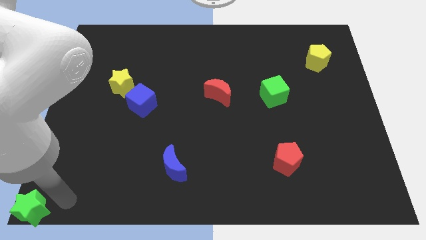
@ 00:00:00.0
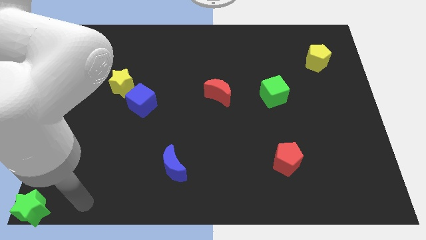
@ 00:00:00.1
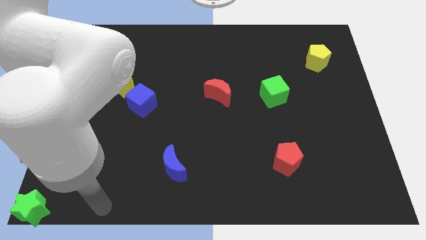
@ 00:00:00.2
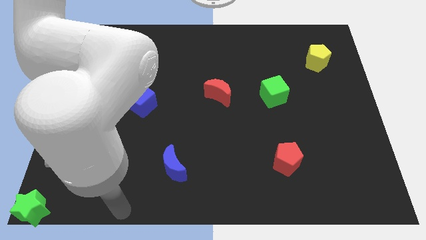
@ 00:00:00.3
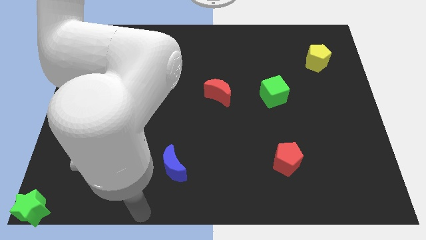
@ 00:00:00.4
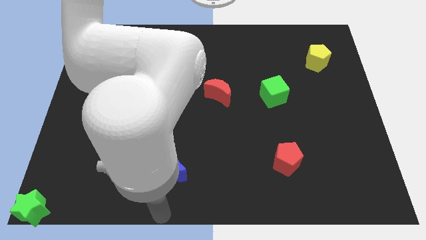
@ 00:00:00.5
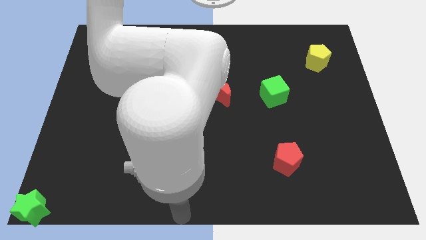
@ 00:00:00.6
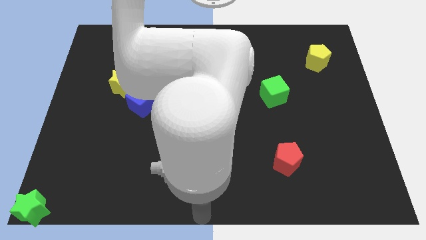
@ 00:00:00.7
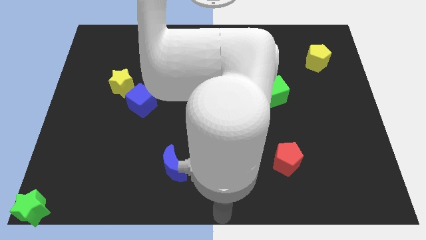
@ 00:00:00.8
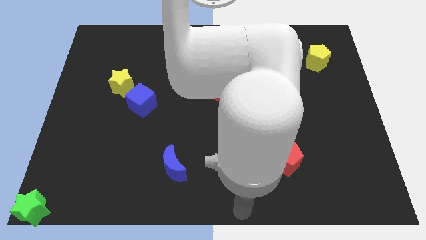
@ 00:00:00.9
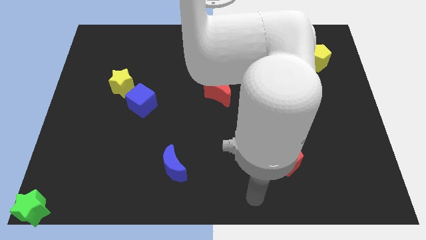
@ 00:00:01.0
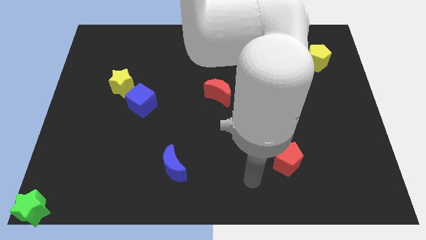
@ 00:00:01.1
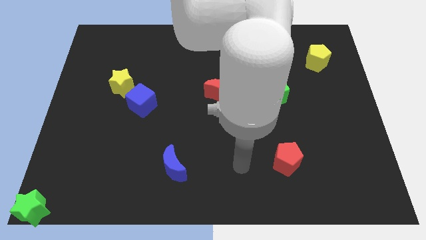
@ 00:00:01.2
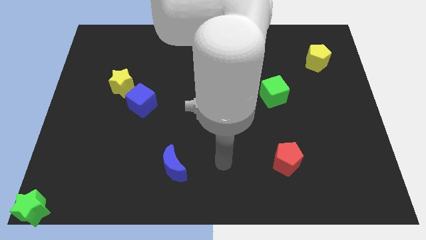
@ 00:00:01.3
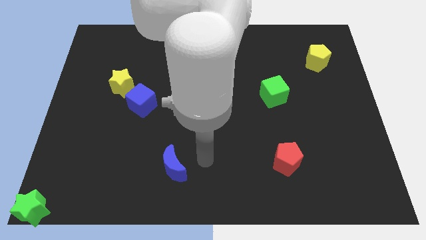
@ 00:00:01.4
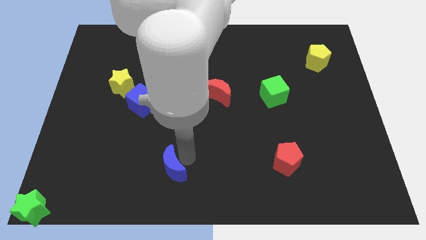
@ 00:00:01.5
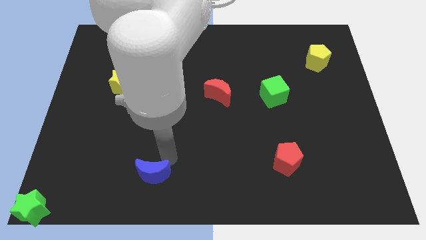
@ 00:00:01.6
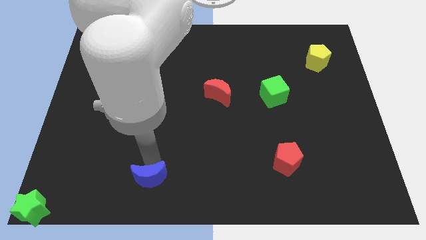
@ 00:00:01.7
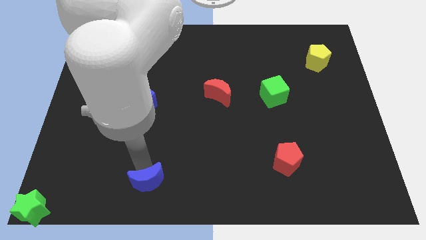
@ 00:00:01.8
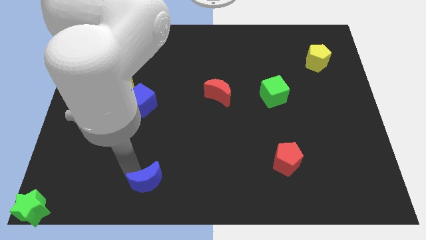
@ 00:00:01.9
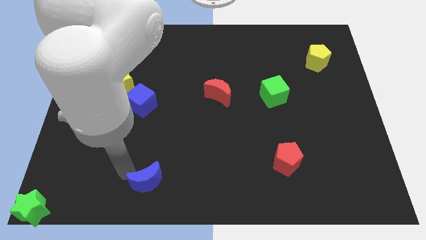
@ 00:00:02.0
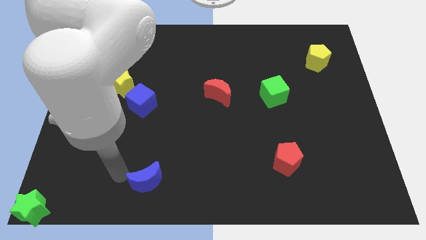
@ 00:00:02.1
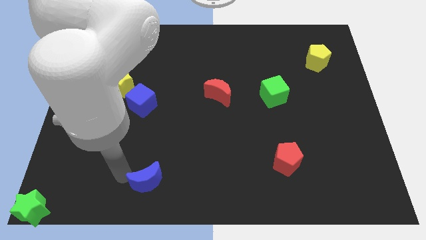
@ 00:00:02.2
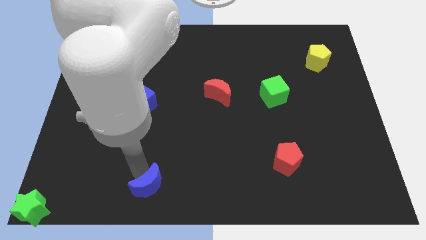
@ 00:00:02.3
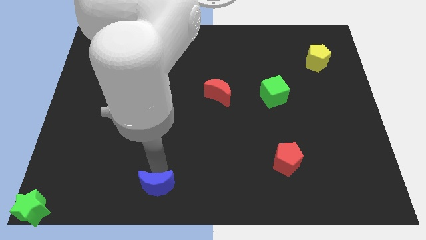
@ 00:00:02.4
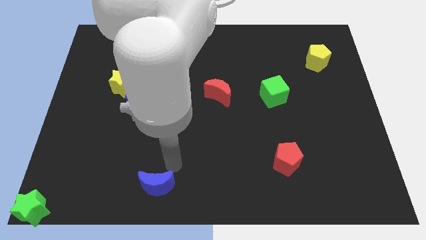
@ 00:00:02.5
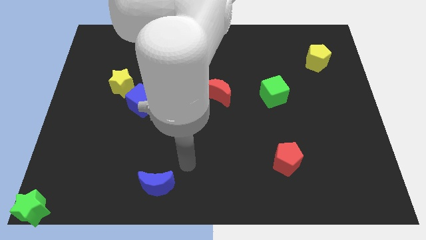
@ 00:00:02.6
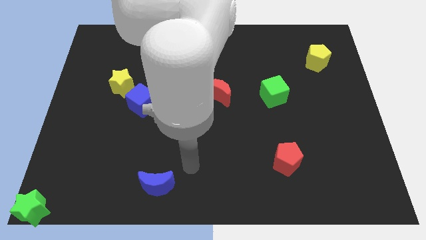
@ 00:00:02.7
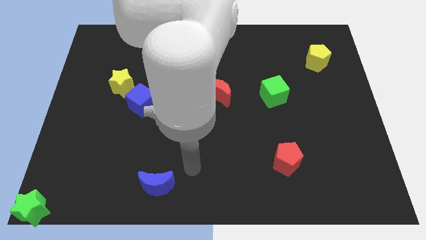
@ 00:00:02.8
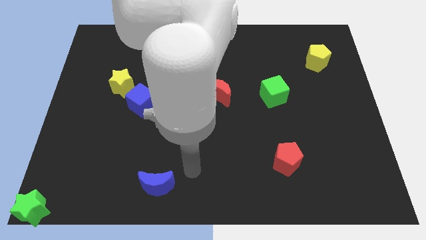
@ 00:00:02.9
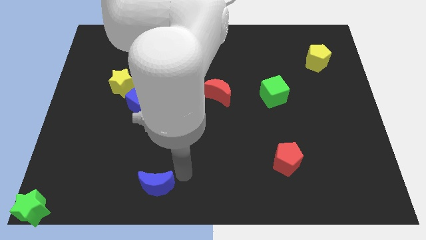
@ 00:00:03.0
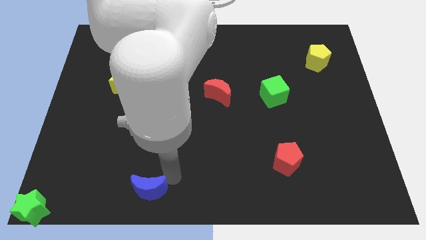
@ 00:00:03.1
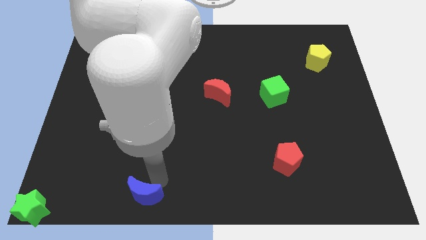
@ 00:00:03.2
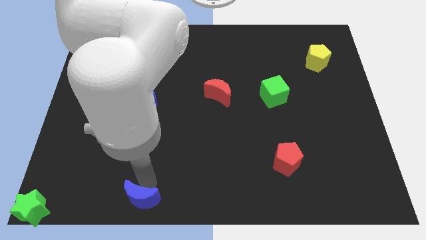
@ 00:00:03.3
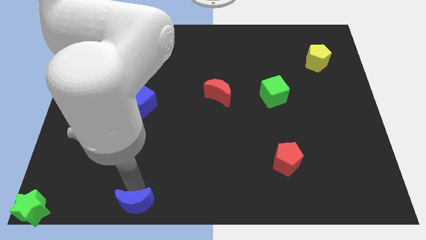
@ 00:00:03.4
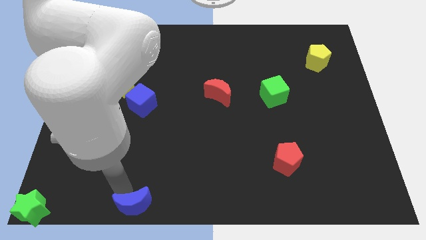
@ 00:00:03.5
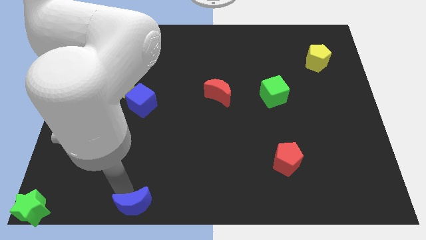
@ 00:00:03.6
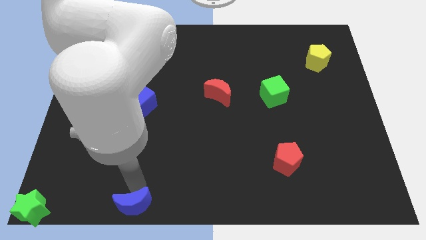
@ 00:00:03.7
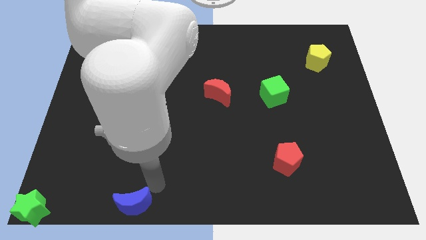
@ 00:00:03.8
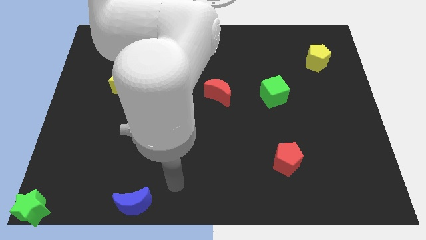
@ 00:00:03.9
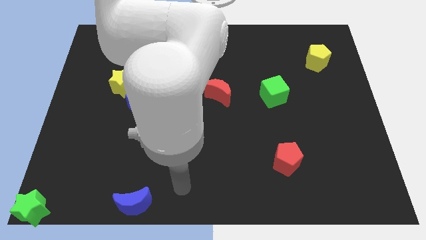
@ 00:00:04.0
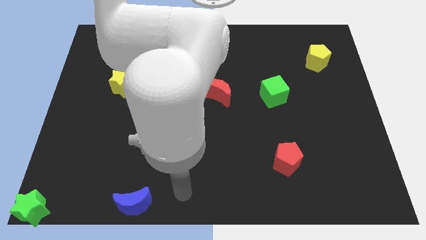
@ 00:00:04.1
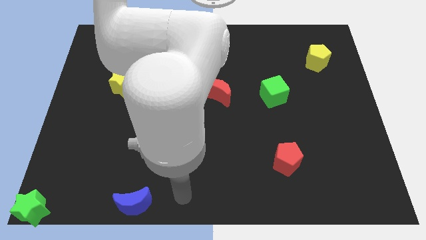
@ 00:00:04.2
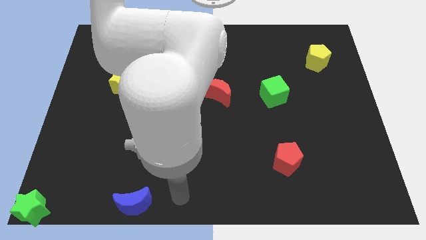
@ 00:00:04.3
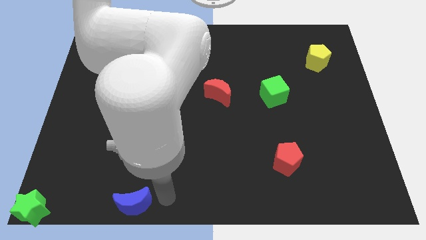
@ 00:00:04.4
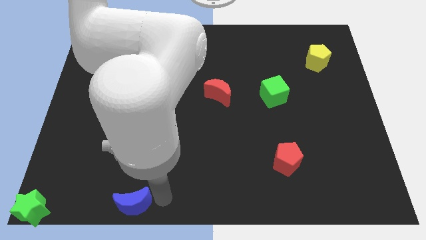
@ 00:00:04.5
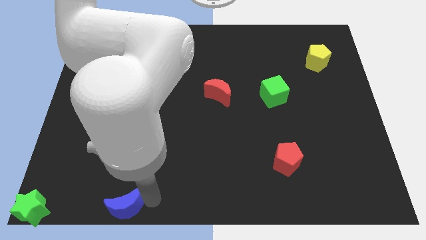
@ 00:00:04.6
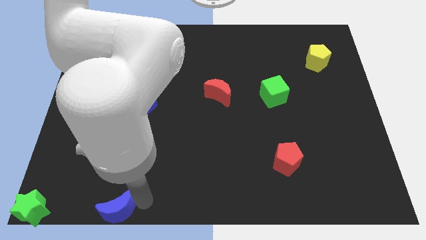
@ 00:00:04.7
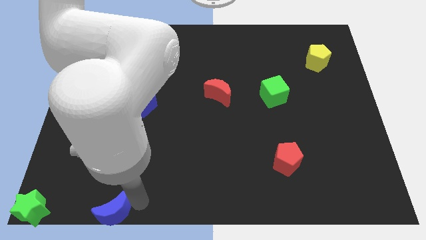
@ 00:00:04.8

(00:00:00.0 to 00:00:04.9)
drag the blue moon towards the right side of the green star

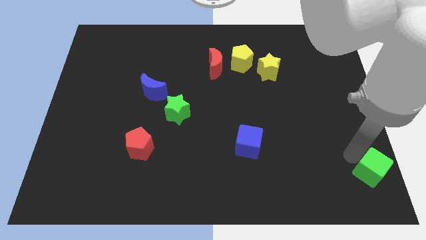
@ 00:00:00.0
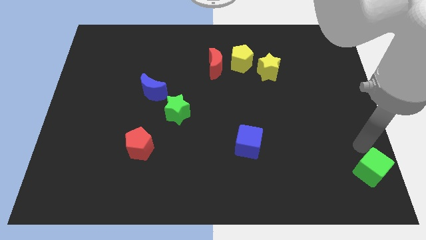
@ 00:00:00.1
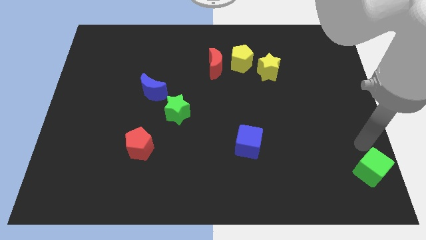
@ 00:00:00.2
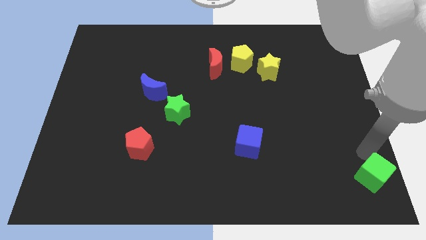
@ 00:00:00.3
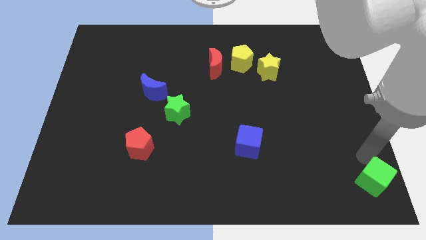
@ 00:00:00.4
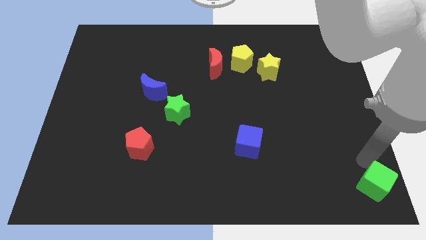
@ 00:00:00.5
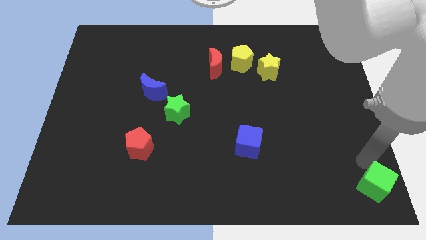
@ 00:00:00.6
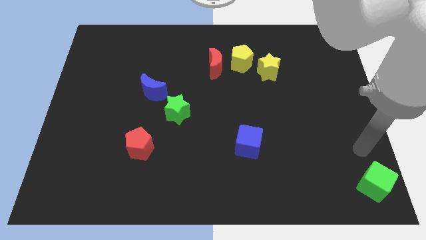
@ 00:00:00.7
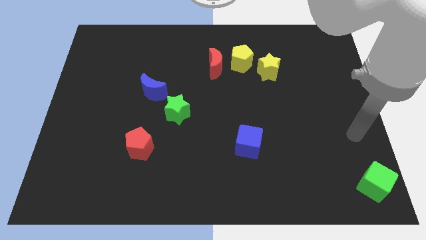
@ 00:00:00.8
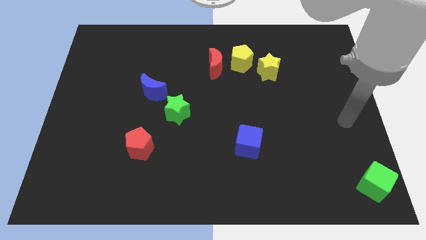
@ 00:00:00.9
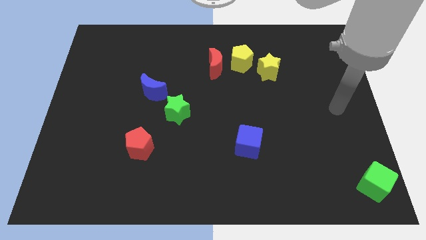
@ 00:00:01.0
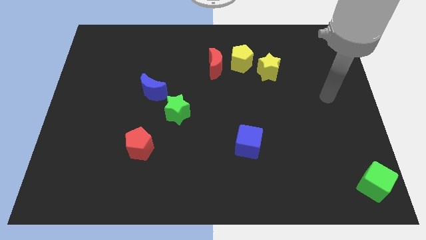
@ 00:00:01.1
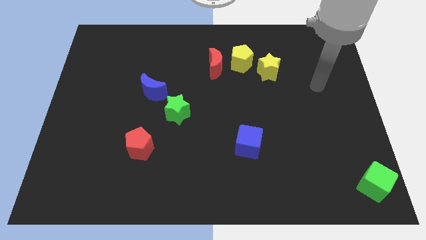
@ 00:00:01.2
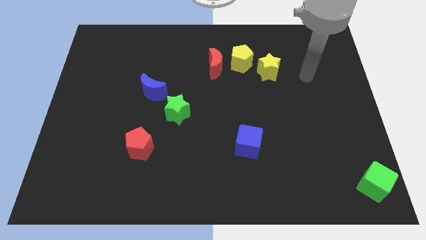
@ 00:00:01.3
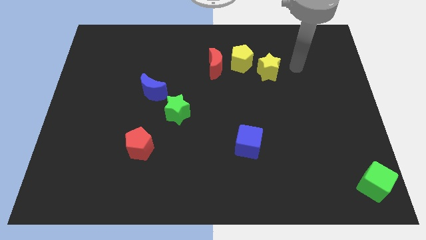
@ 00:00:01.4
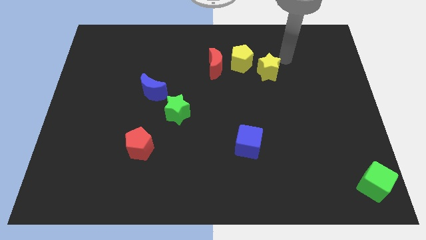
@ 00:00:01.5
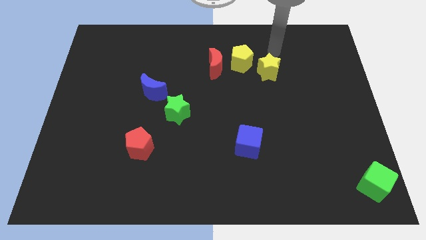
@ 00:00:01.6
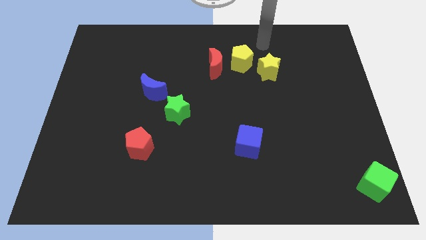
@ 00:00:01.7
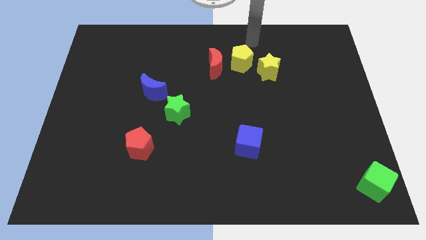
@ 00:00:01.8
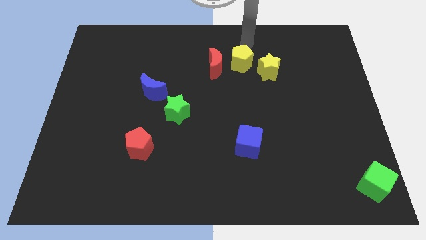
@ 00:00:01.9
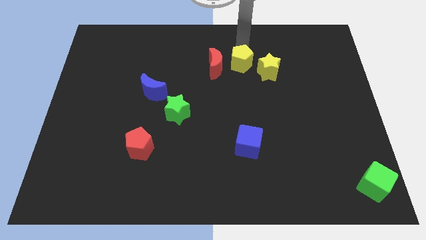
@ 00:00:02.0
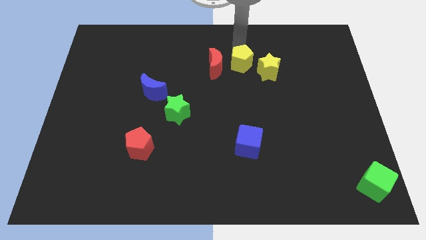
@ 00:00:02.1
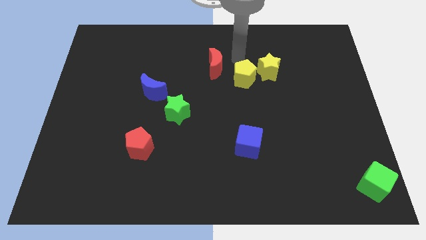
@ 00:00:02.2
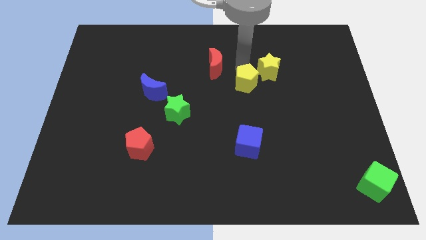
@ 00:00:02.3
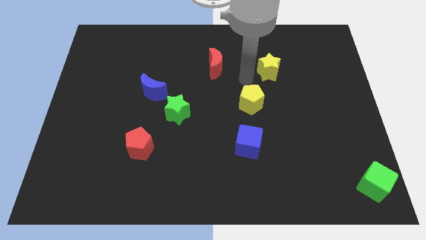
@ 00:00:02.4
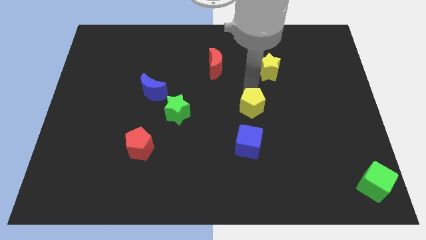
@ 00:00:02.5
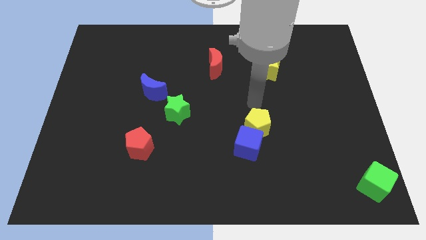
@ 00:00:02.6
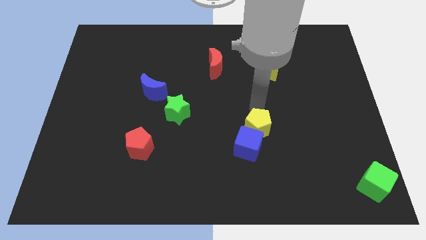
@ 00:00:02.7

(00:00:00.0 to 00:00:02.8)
push yellow pentagon towards blue cube

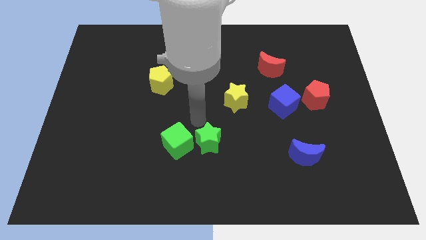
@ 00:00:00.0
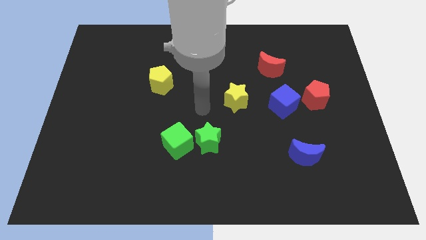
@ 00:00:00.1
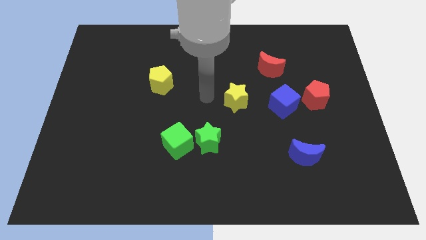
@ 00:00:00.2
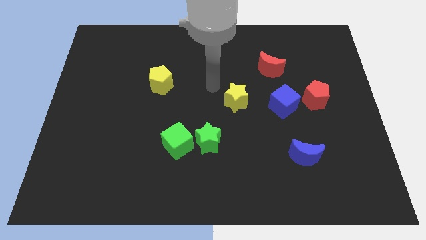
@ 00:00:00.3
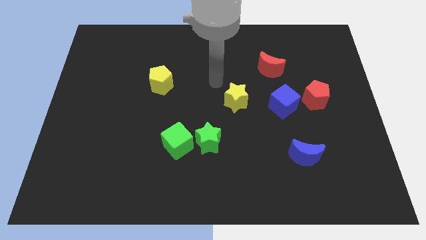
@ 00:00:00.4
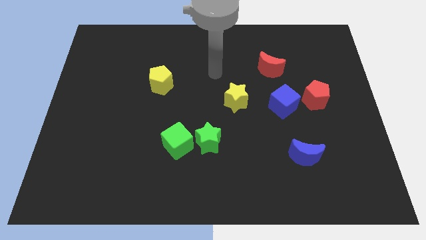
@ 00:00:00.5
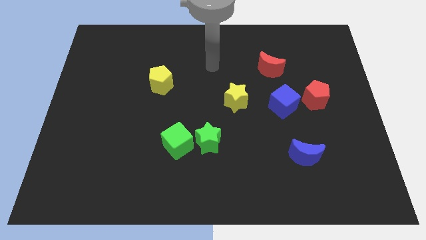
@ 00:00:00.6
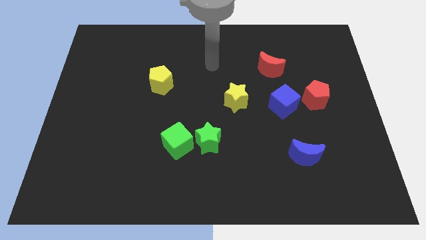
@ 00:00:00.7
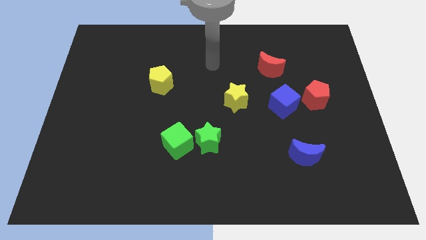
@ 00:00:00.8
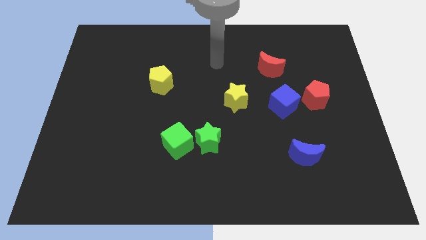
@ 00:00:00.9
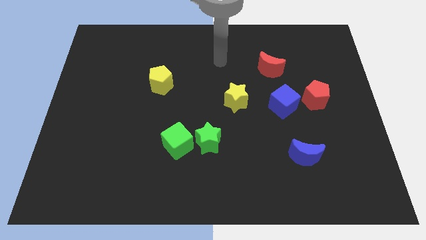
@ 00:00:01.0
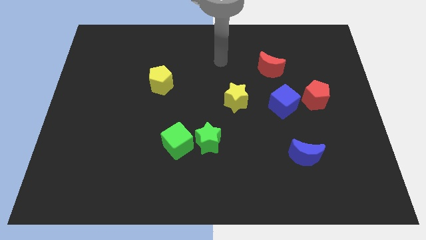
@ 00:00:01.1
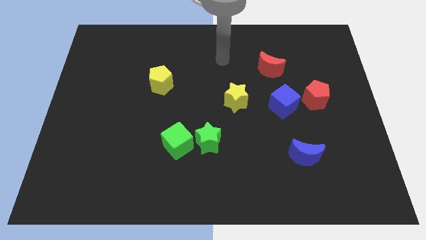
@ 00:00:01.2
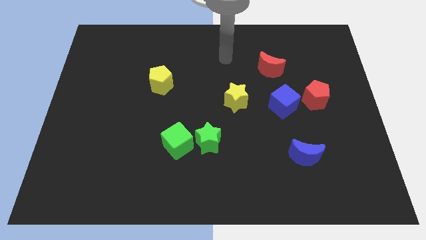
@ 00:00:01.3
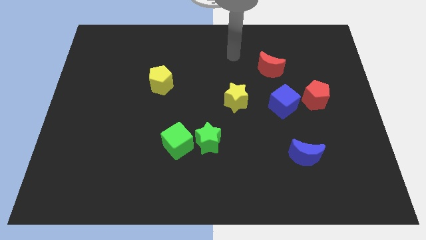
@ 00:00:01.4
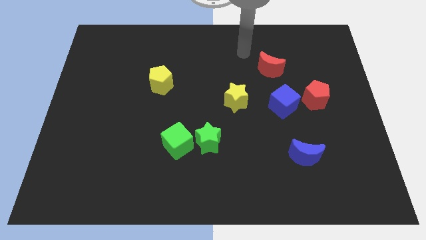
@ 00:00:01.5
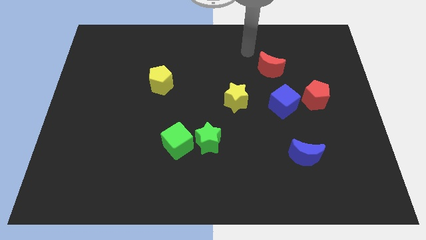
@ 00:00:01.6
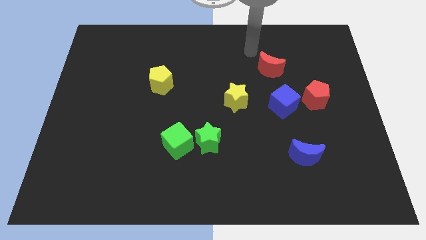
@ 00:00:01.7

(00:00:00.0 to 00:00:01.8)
point your hand at the top left side of the red moon
